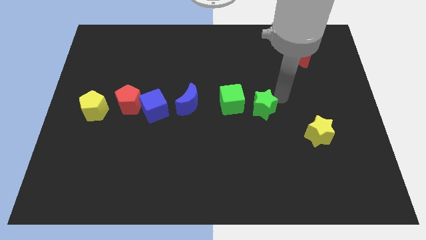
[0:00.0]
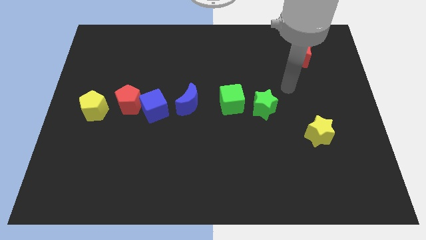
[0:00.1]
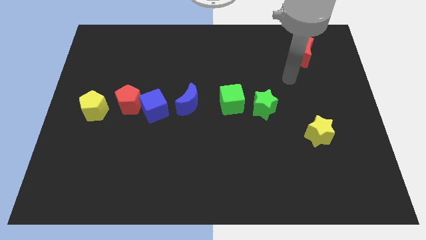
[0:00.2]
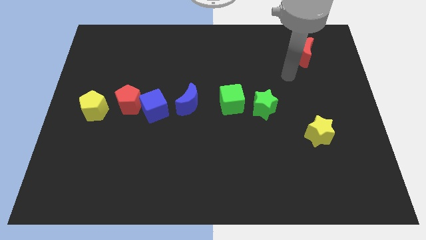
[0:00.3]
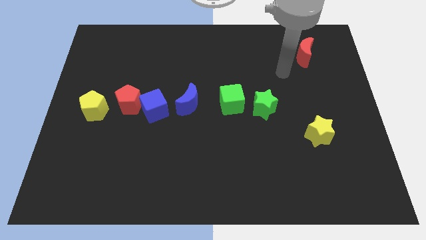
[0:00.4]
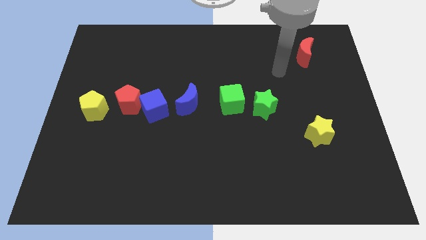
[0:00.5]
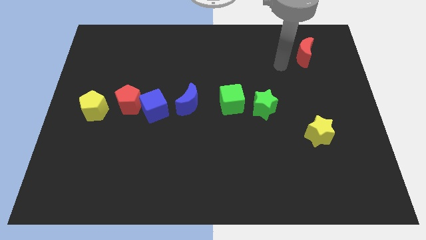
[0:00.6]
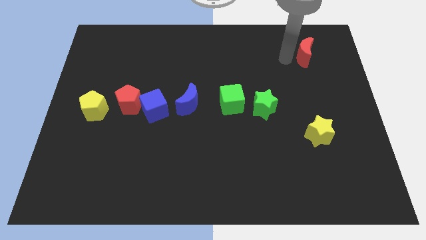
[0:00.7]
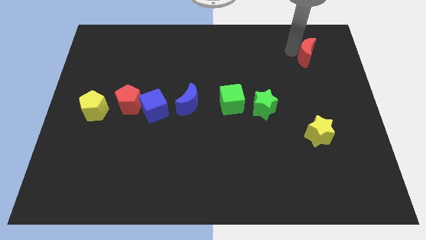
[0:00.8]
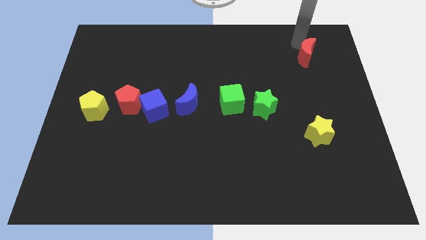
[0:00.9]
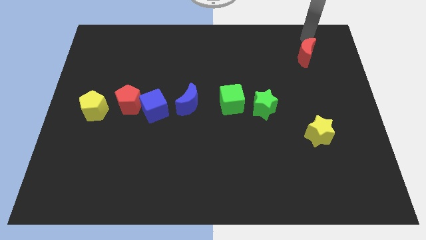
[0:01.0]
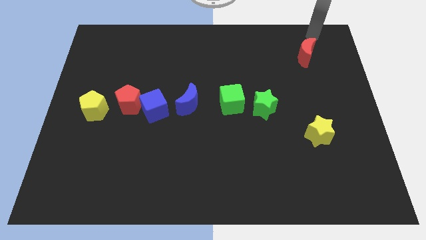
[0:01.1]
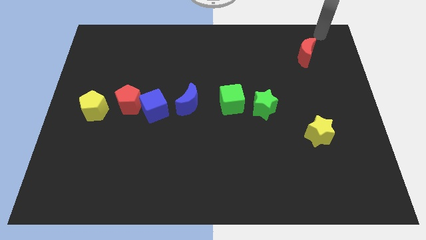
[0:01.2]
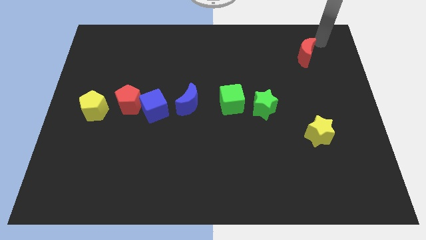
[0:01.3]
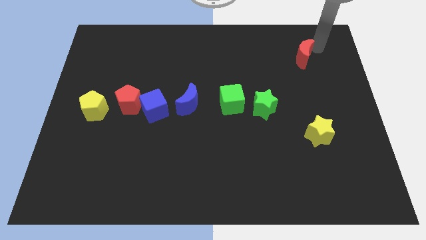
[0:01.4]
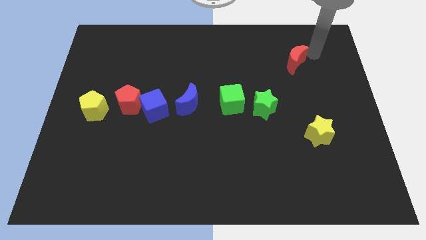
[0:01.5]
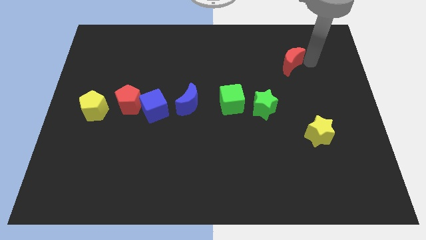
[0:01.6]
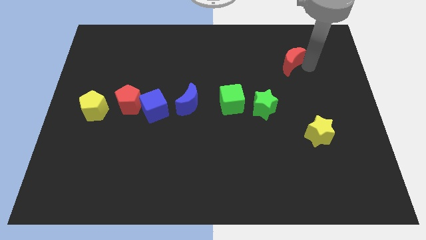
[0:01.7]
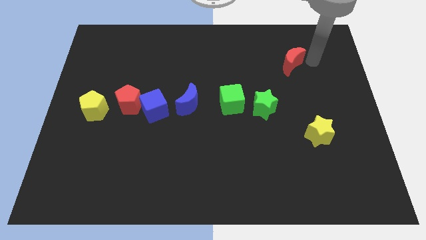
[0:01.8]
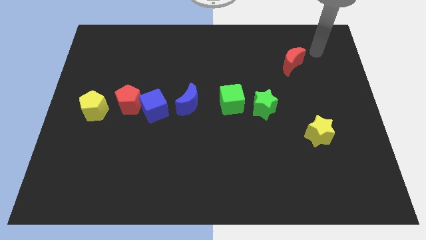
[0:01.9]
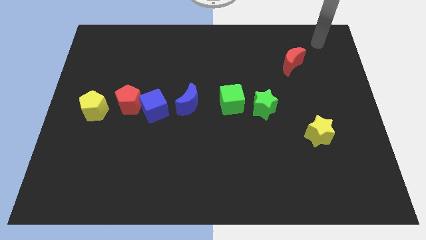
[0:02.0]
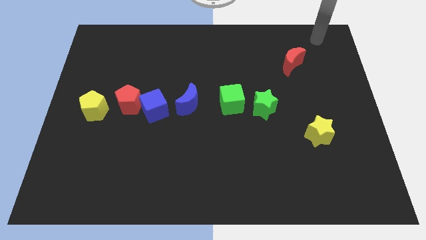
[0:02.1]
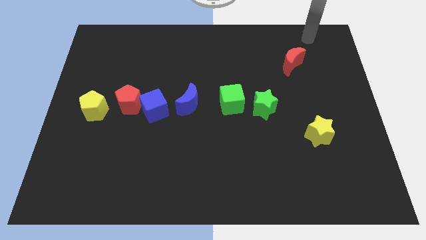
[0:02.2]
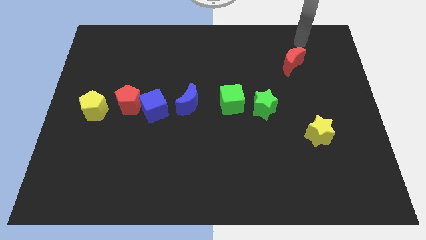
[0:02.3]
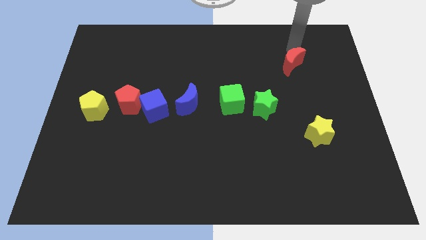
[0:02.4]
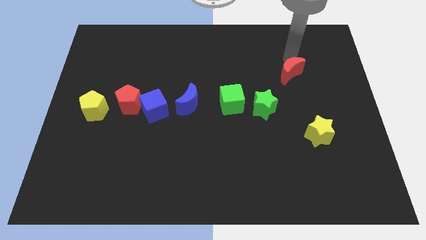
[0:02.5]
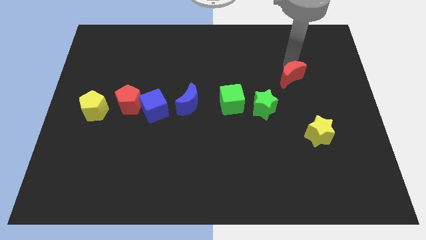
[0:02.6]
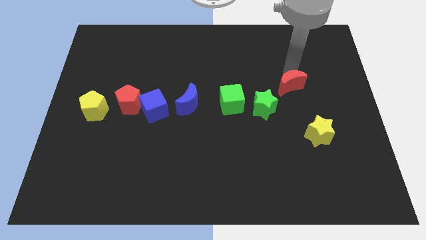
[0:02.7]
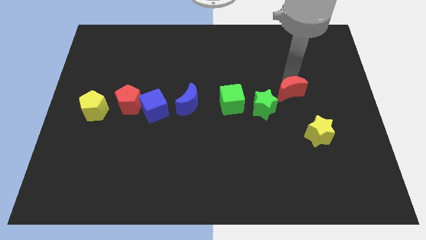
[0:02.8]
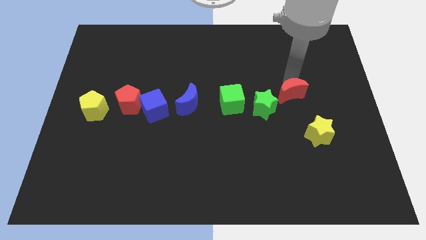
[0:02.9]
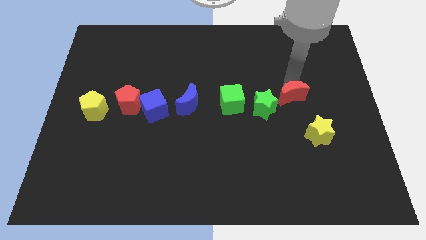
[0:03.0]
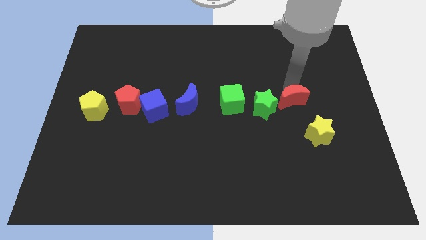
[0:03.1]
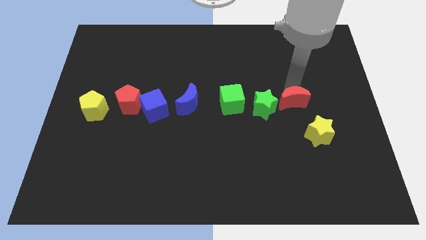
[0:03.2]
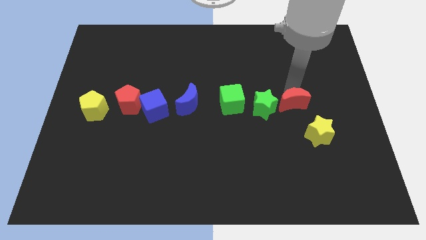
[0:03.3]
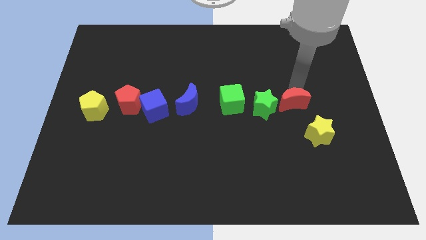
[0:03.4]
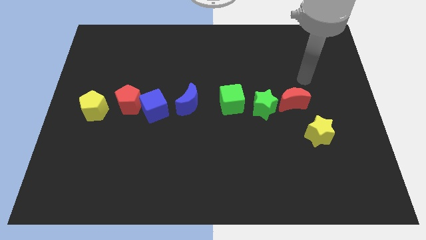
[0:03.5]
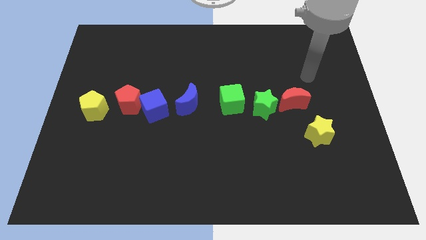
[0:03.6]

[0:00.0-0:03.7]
push the red crescent to the right of the green star

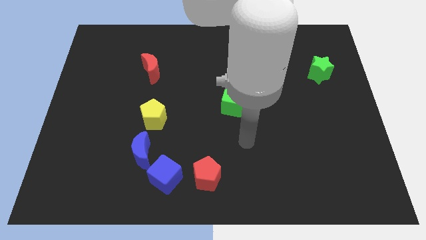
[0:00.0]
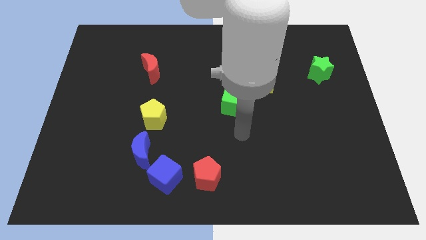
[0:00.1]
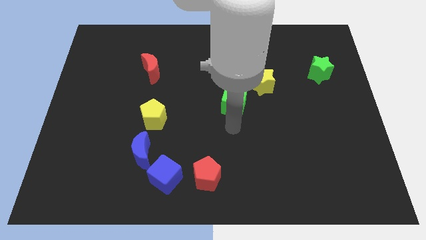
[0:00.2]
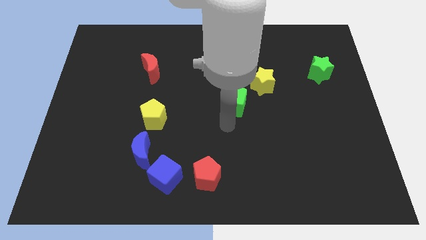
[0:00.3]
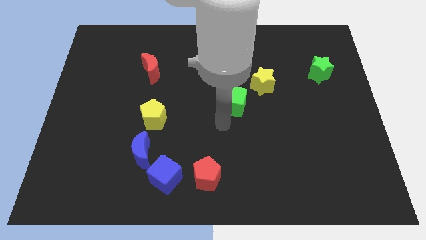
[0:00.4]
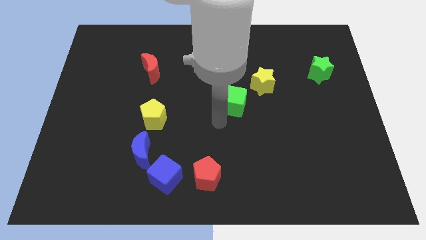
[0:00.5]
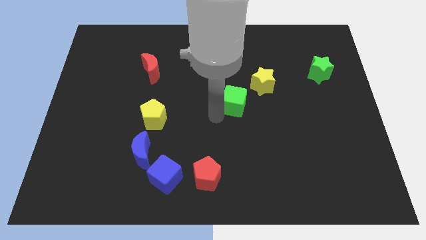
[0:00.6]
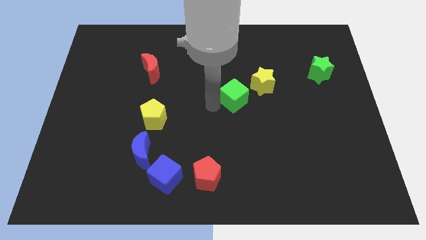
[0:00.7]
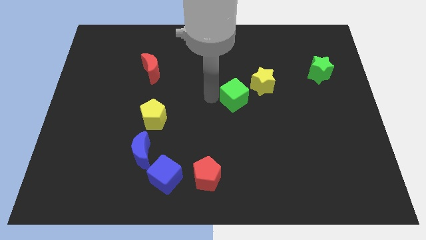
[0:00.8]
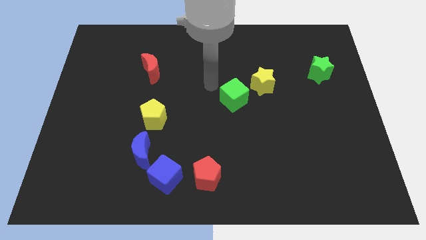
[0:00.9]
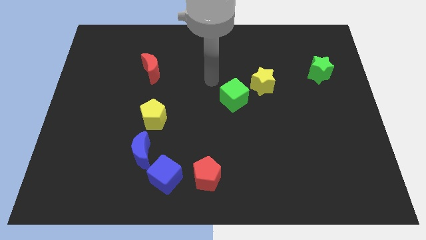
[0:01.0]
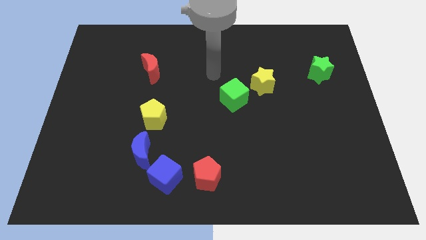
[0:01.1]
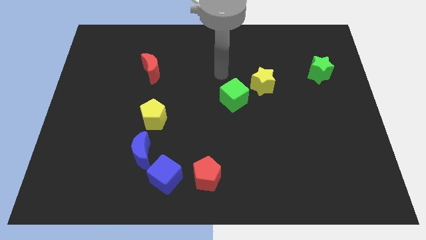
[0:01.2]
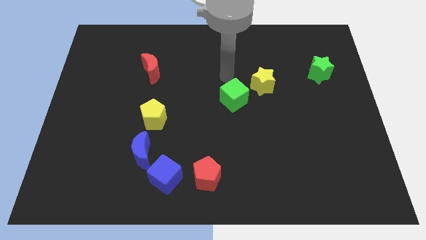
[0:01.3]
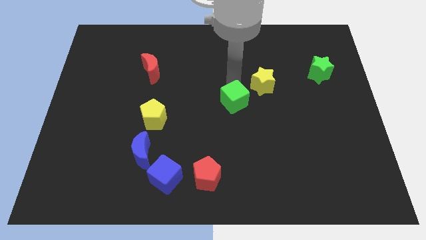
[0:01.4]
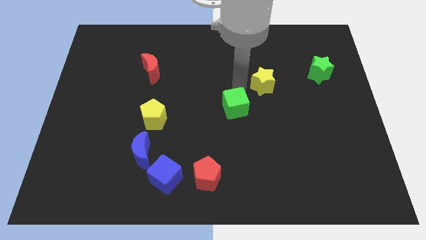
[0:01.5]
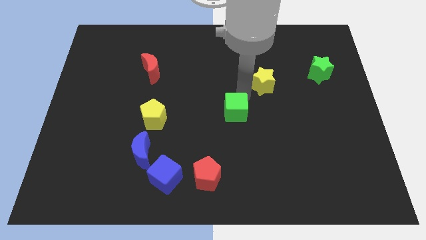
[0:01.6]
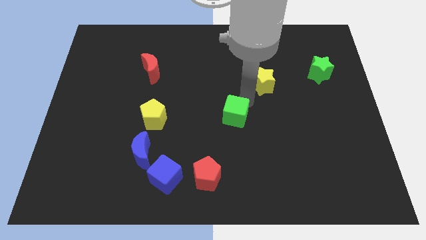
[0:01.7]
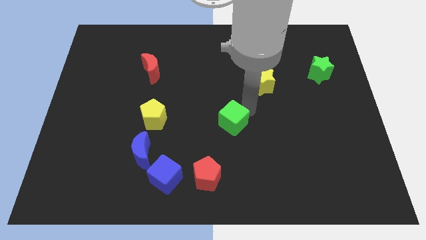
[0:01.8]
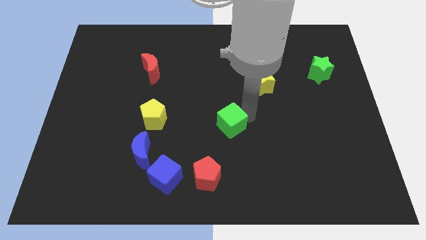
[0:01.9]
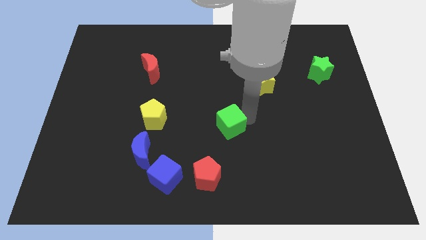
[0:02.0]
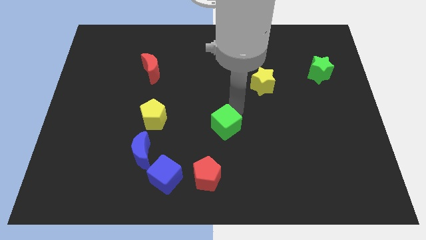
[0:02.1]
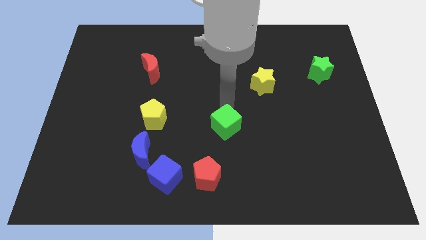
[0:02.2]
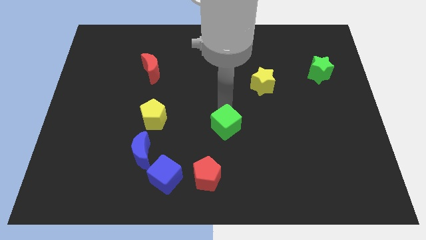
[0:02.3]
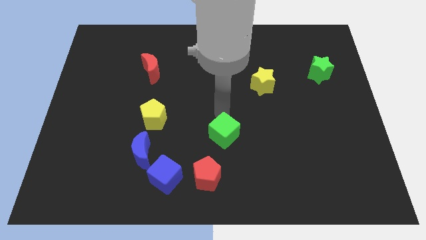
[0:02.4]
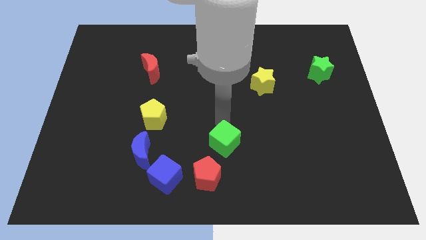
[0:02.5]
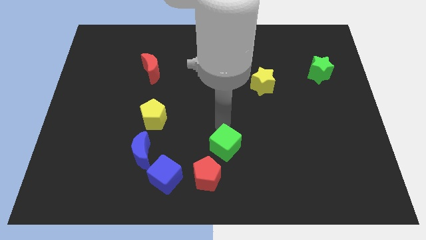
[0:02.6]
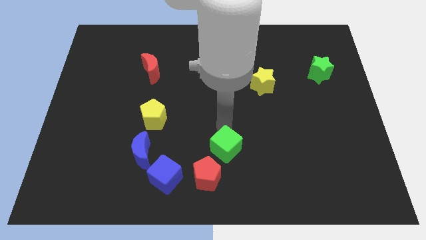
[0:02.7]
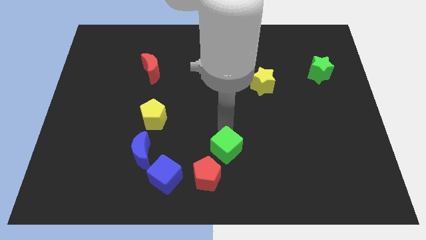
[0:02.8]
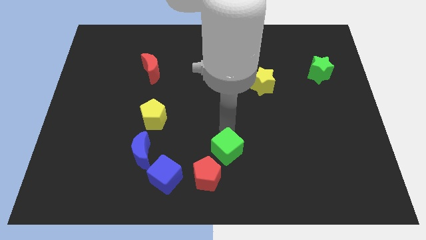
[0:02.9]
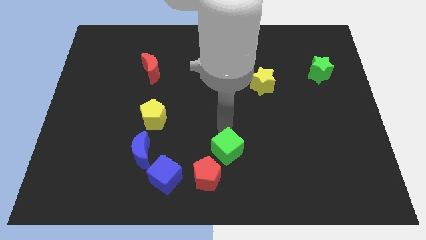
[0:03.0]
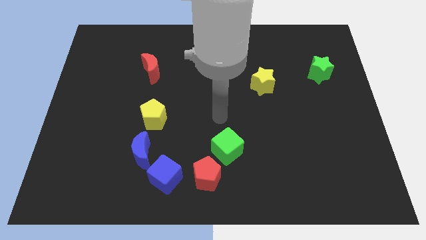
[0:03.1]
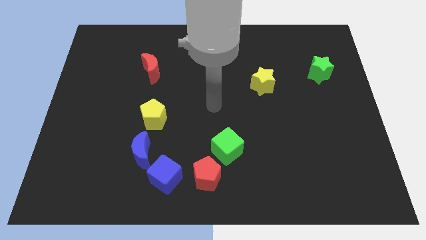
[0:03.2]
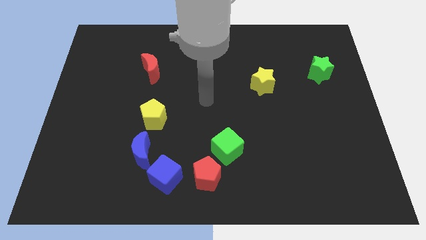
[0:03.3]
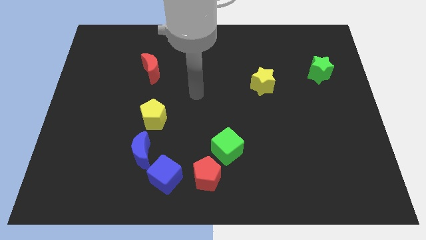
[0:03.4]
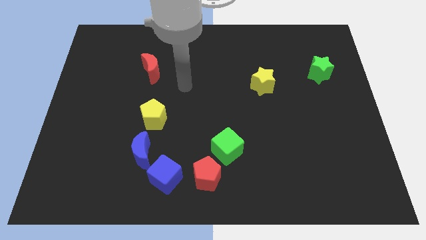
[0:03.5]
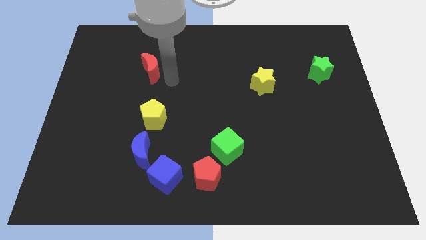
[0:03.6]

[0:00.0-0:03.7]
slide the green cube parallel to the blue crescent

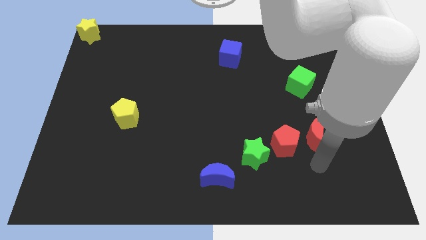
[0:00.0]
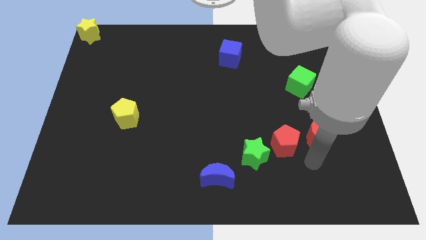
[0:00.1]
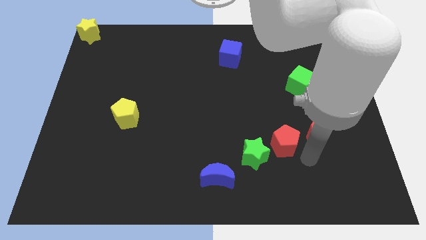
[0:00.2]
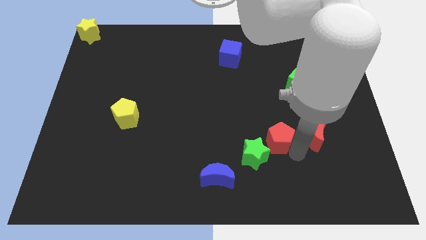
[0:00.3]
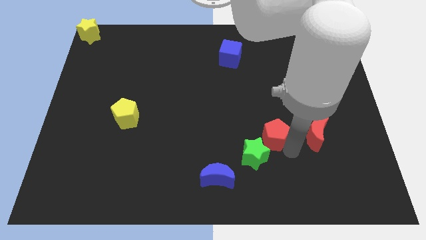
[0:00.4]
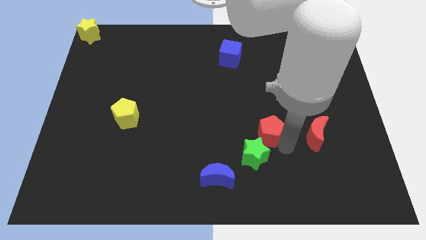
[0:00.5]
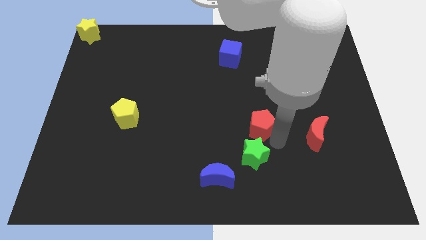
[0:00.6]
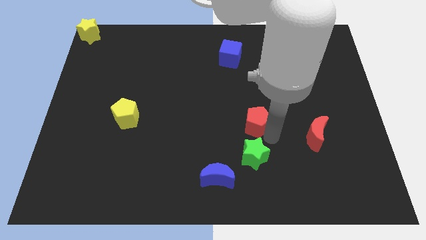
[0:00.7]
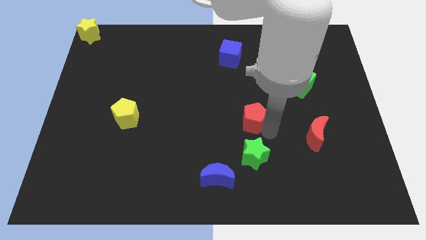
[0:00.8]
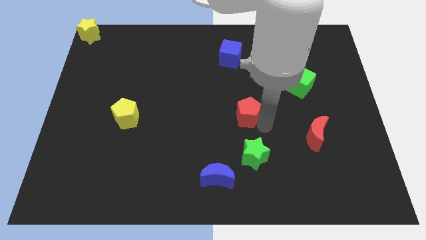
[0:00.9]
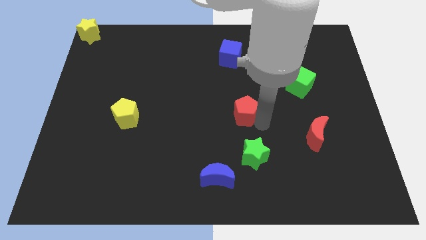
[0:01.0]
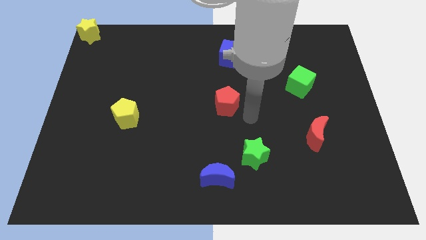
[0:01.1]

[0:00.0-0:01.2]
move the red pentagon towards the center of the board

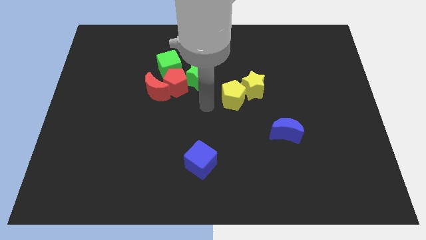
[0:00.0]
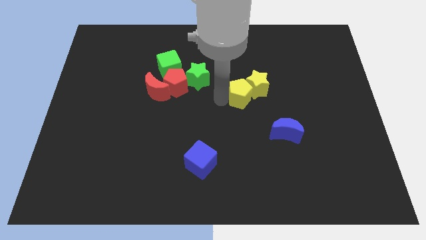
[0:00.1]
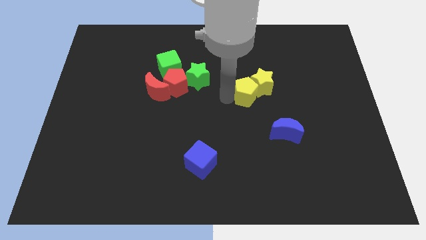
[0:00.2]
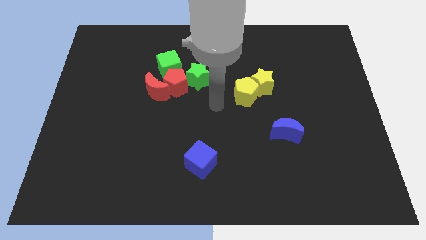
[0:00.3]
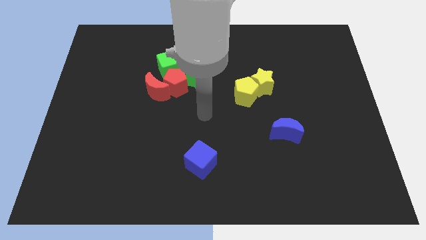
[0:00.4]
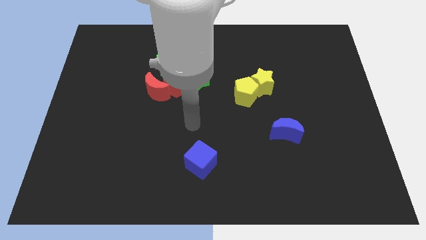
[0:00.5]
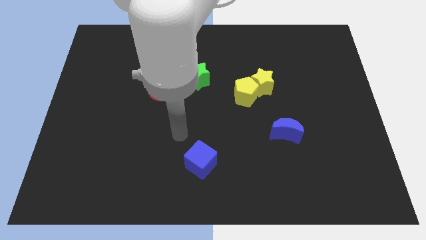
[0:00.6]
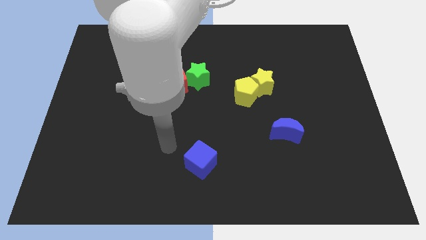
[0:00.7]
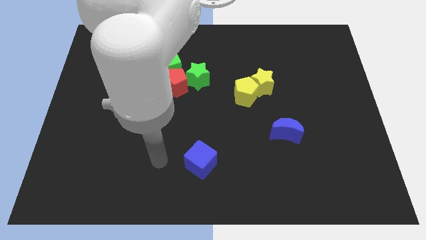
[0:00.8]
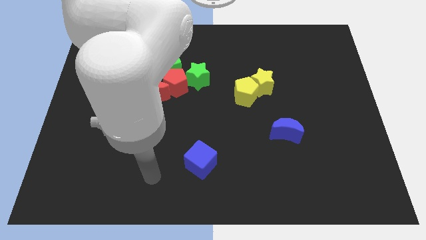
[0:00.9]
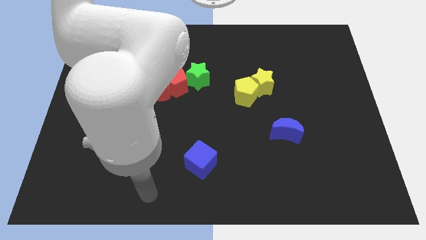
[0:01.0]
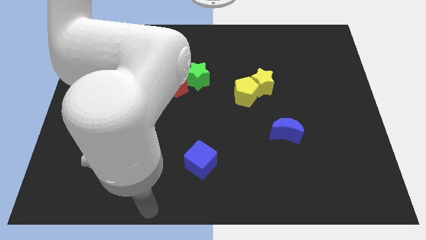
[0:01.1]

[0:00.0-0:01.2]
move your arm away form yellow pentagon
